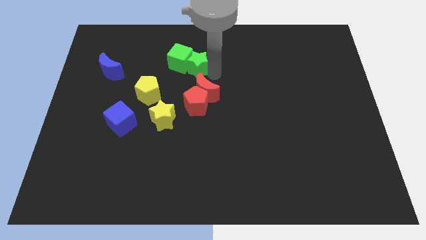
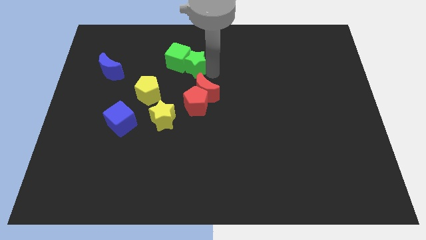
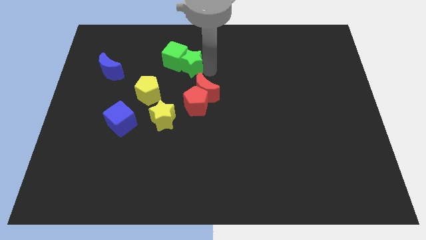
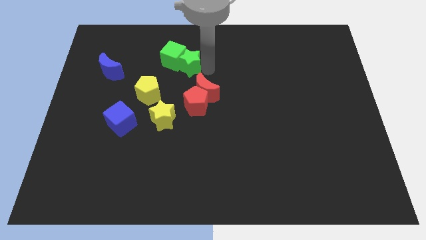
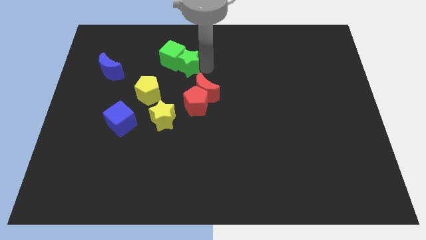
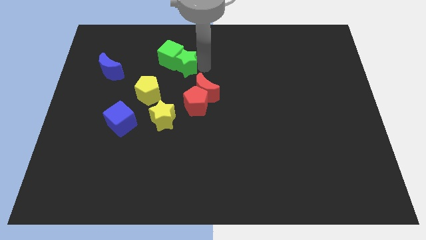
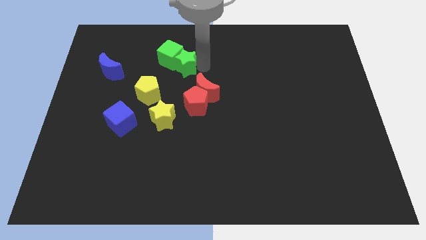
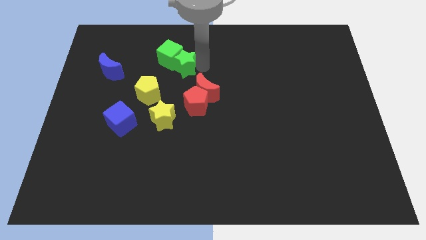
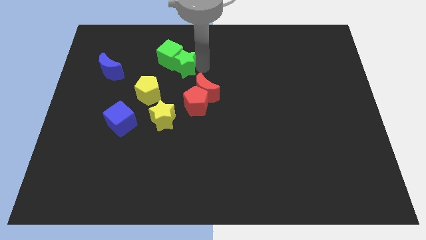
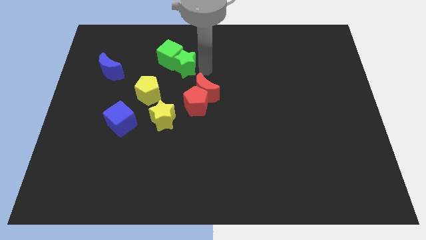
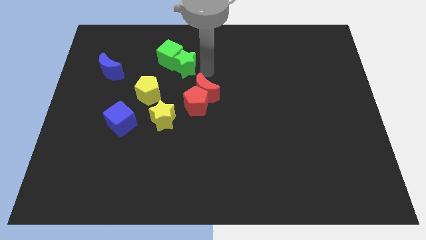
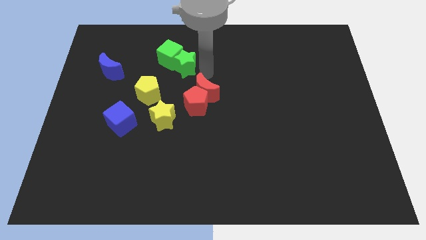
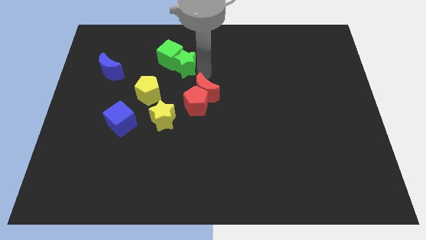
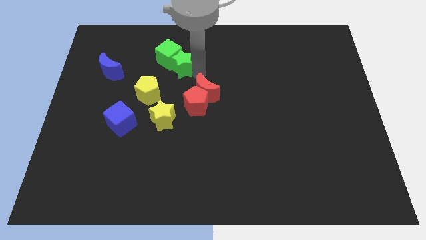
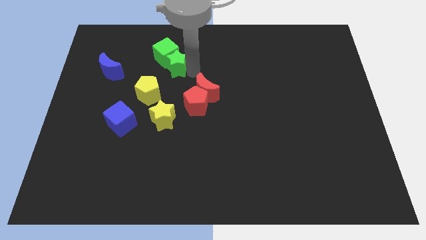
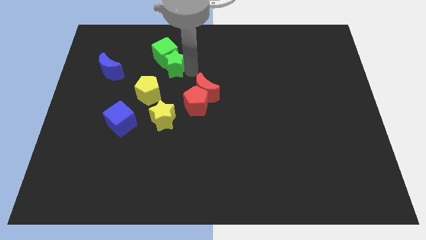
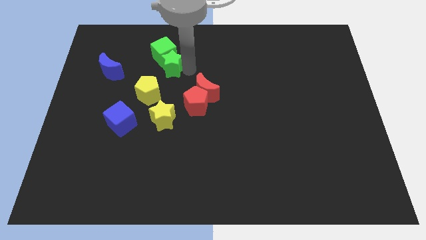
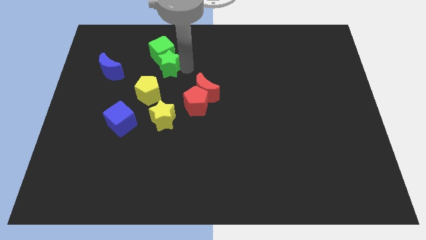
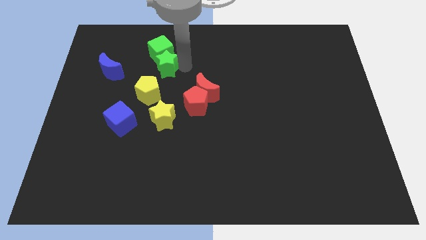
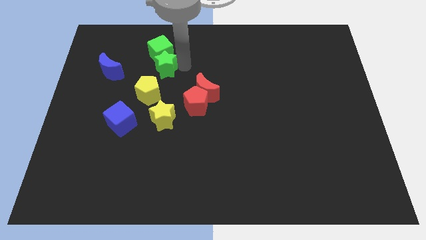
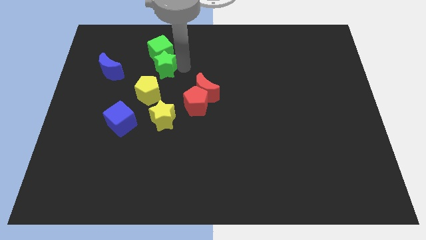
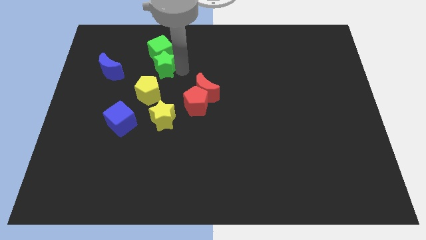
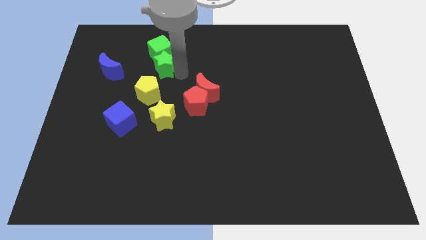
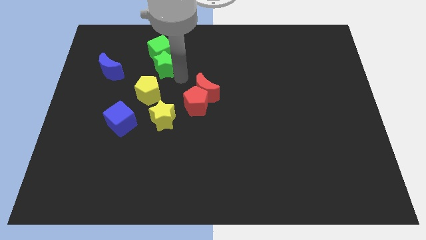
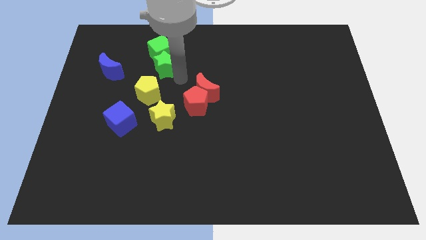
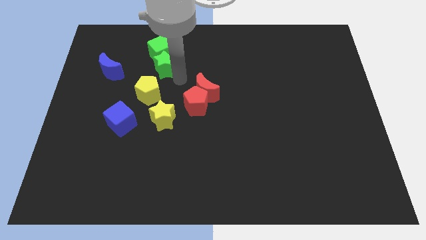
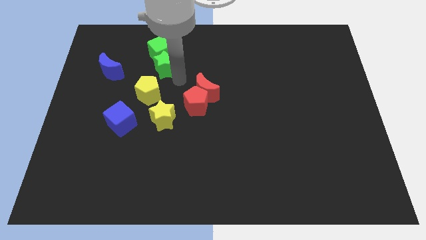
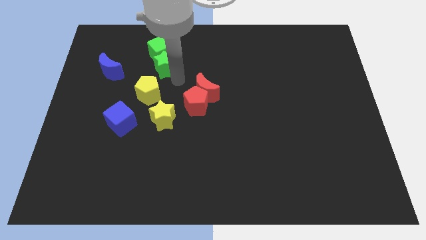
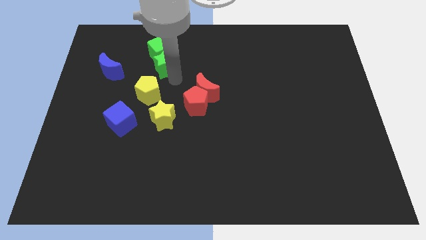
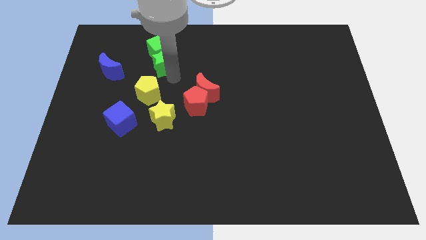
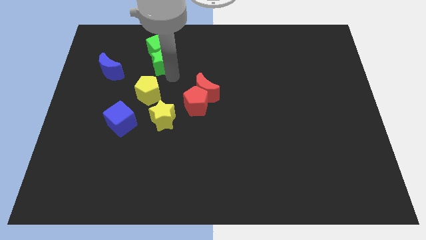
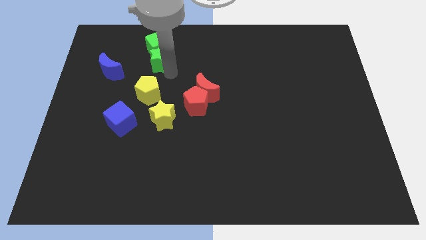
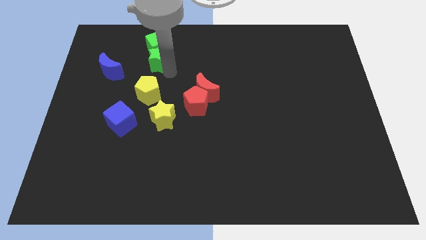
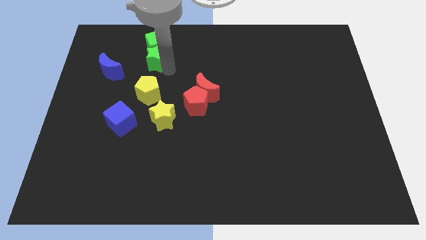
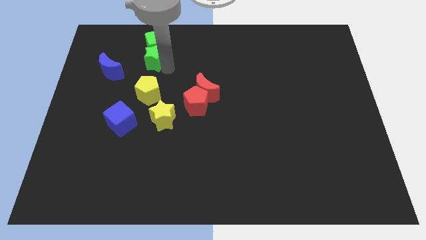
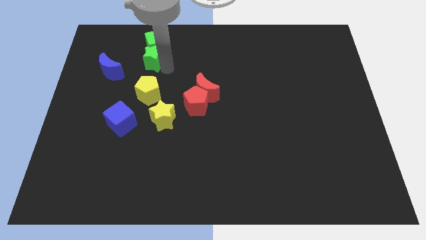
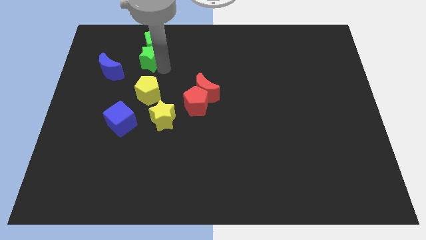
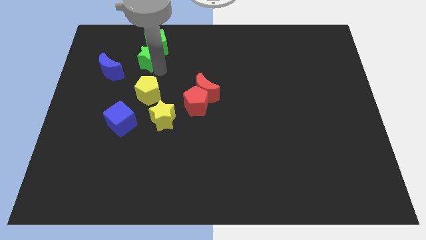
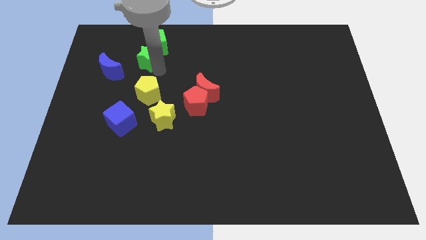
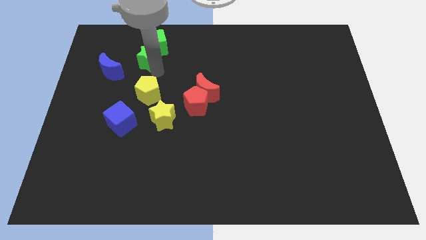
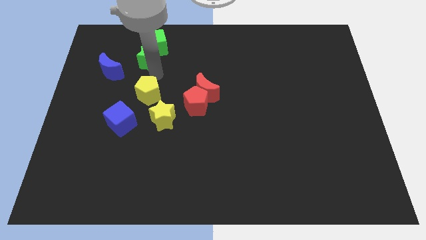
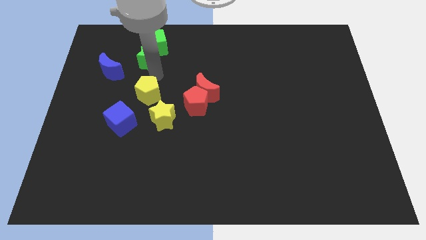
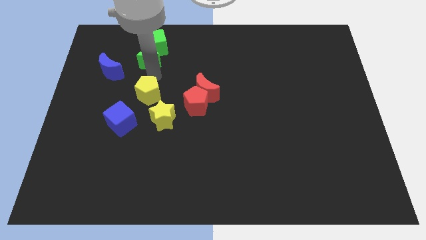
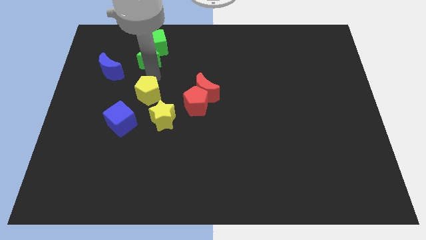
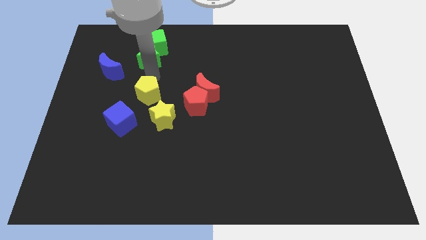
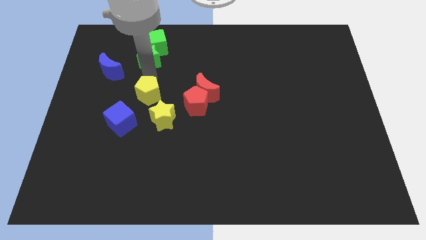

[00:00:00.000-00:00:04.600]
push the green star and the green cube slightly towards the top side of the yellow pentagon

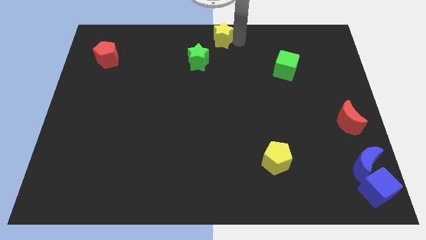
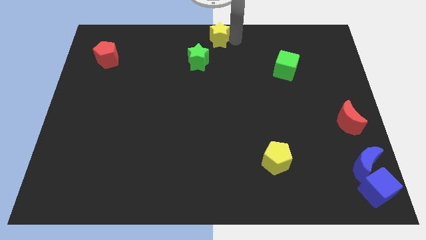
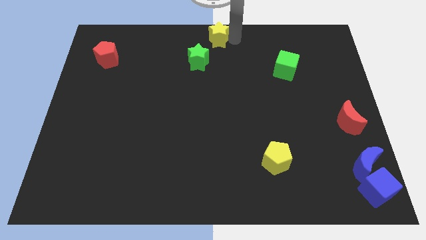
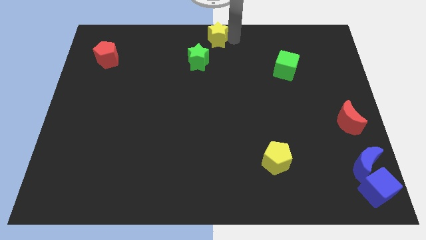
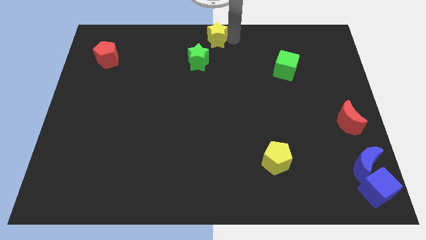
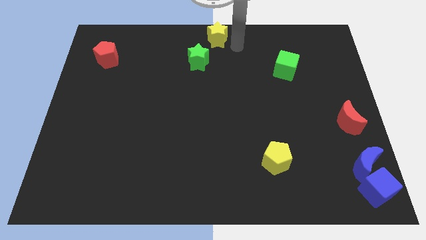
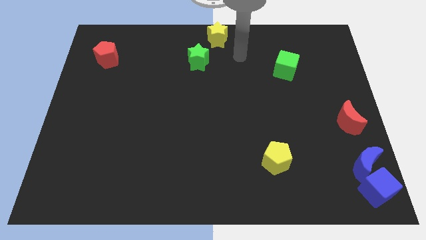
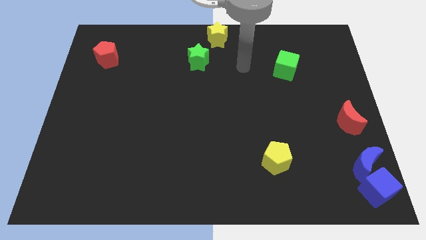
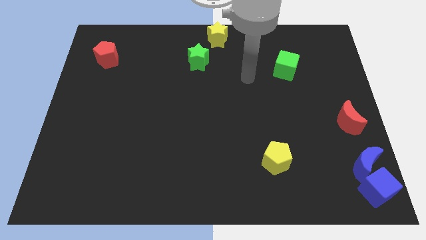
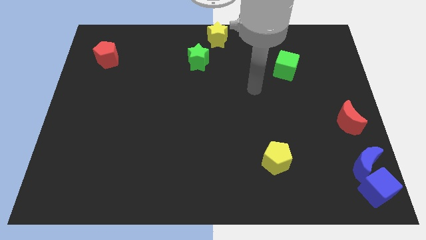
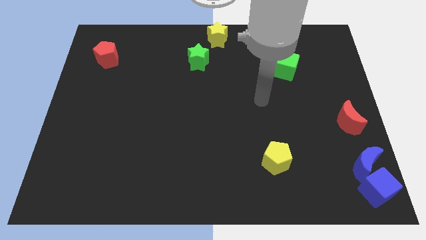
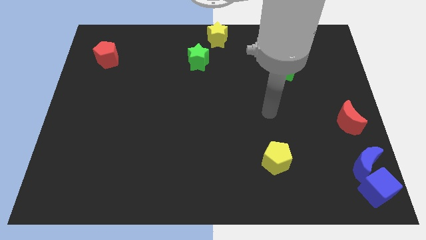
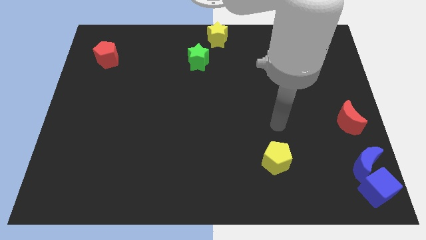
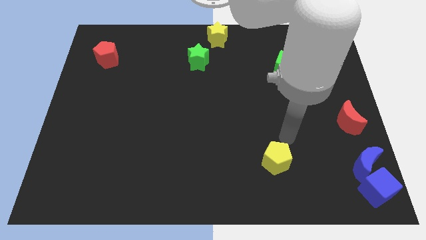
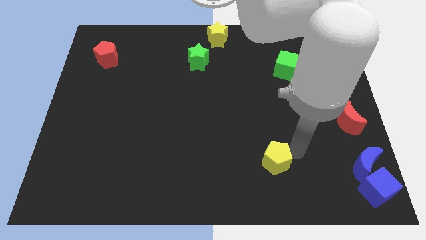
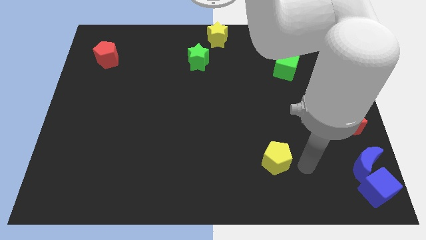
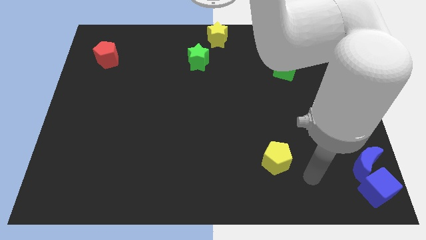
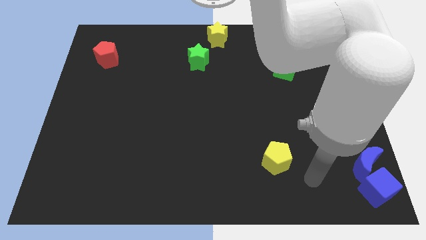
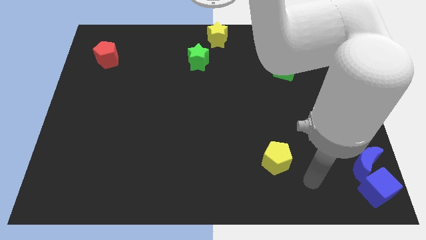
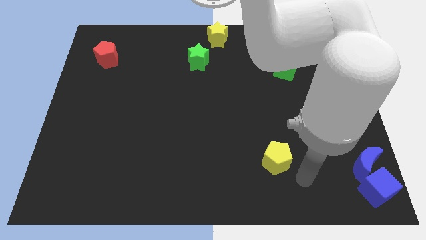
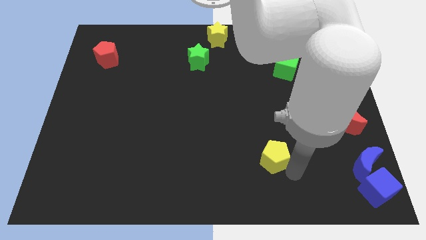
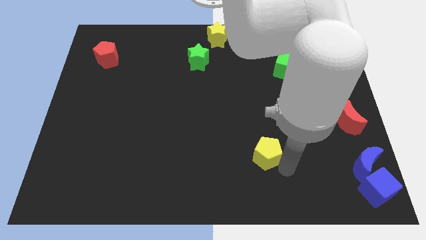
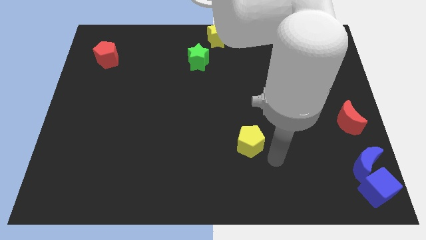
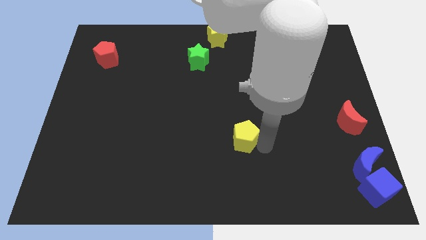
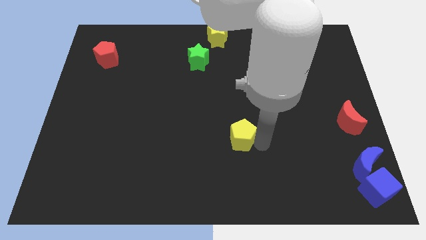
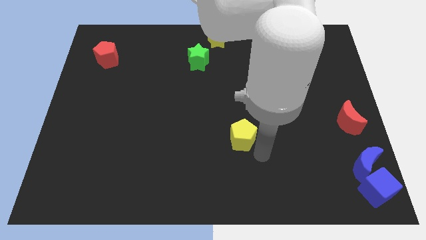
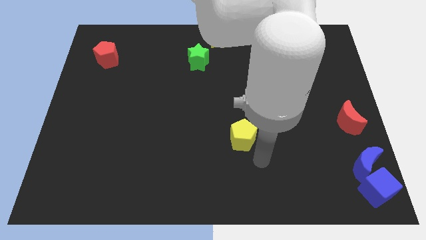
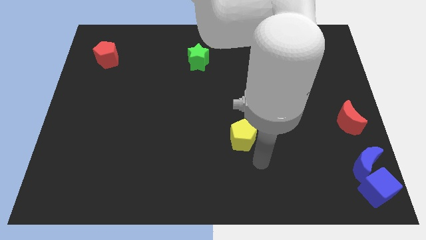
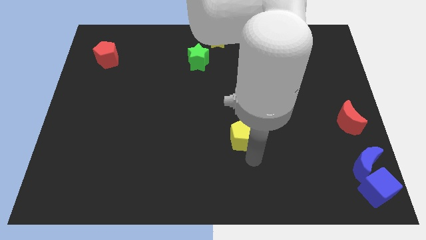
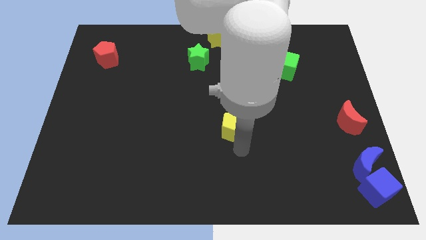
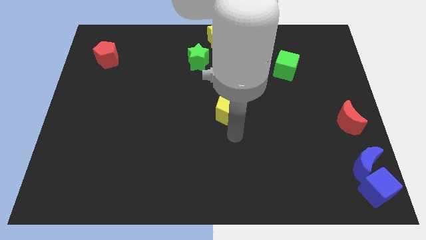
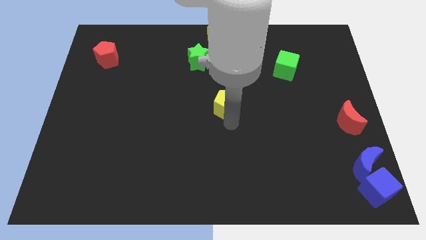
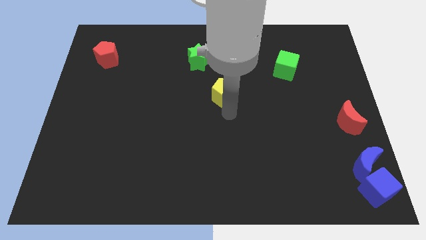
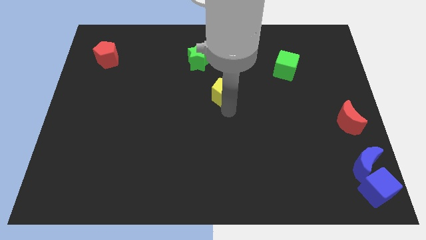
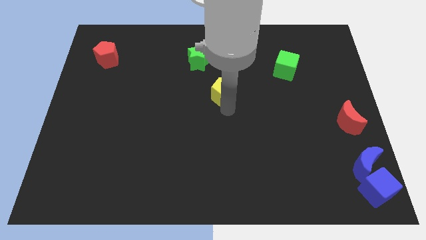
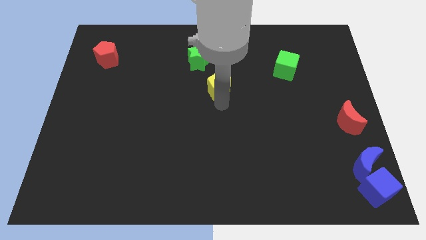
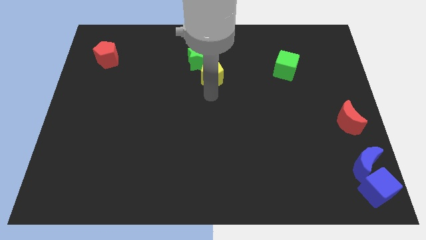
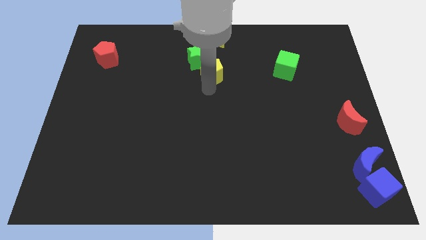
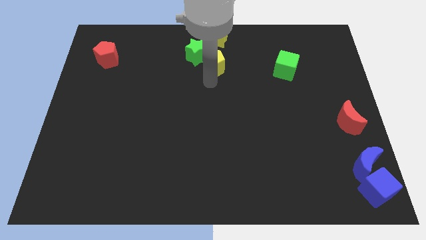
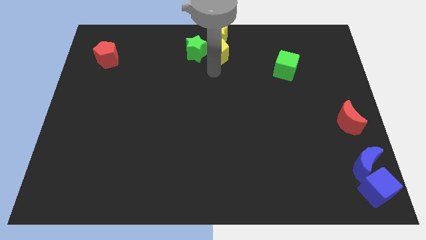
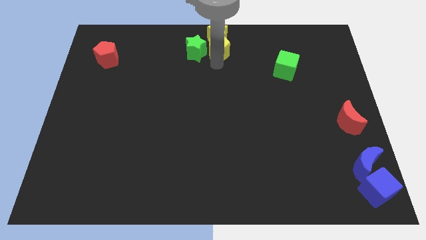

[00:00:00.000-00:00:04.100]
place yellow pentagon below yellow star

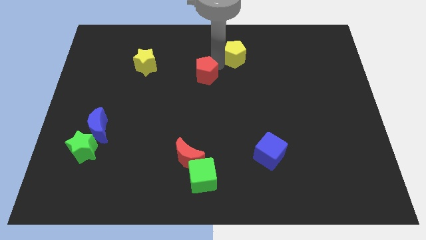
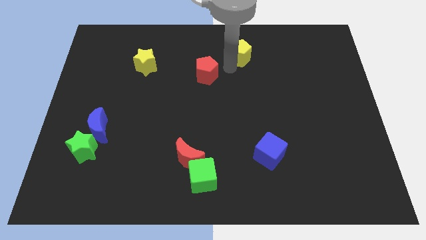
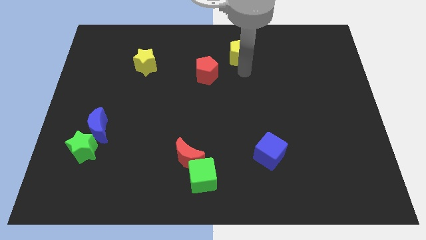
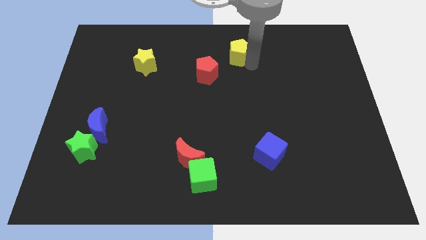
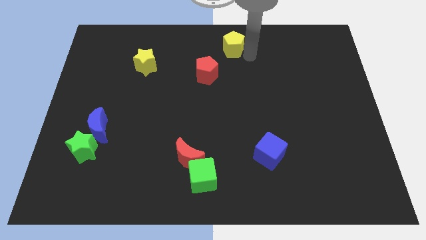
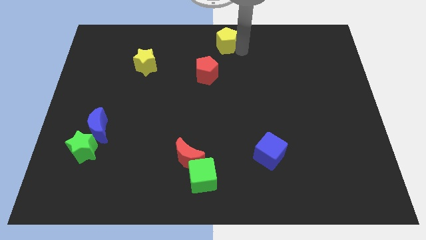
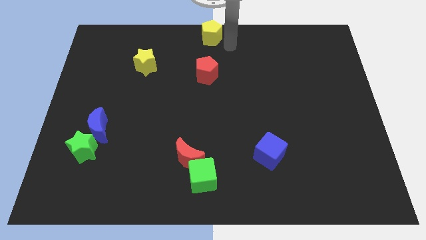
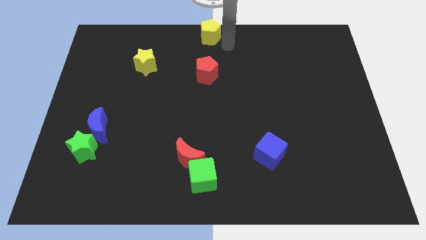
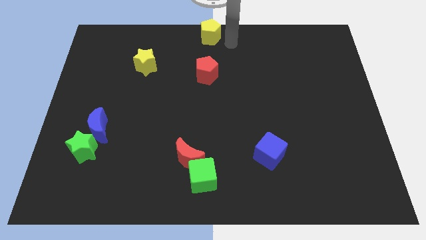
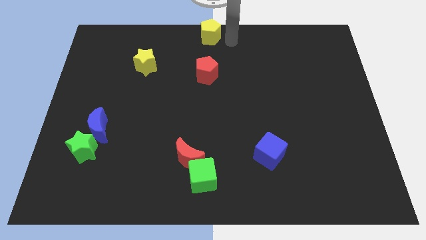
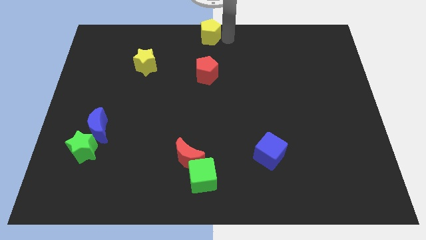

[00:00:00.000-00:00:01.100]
push the yellow pentagon to the top of the red pentagon
